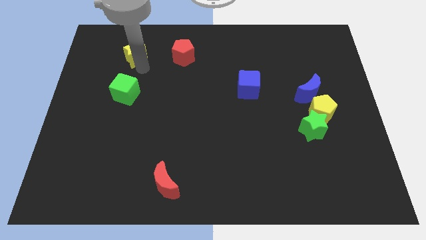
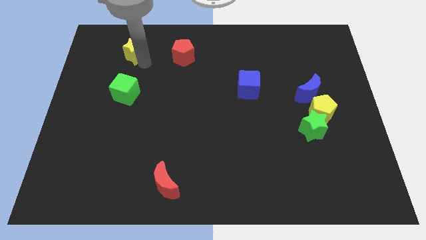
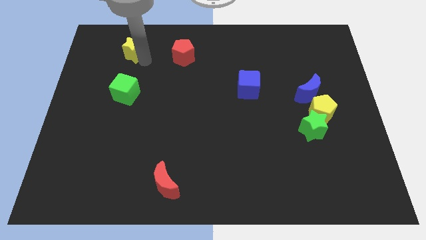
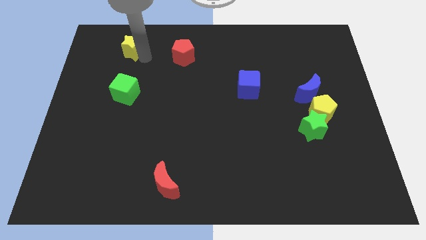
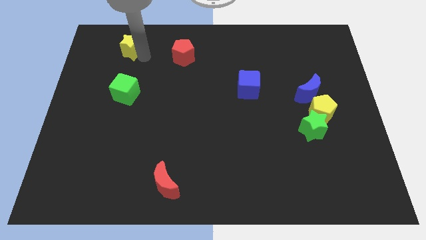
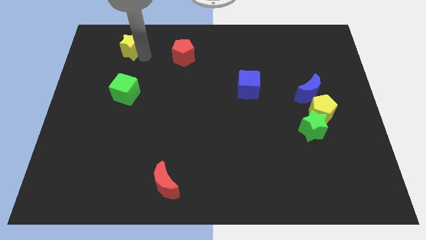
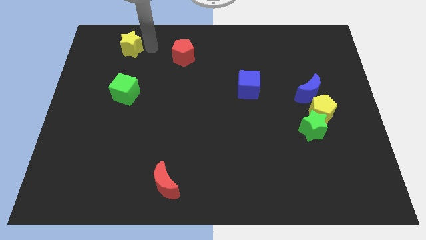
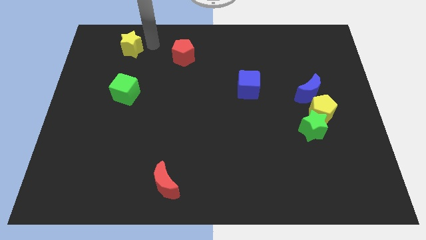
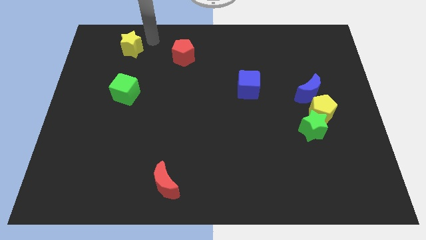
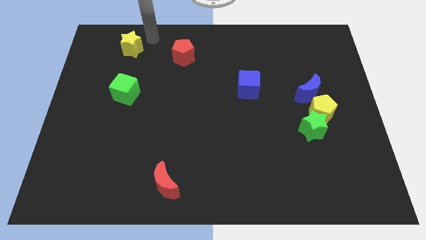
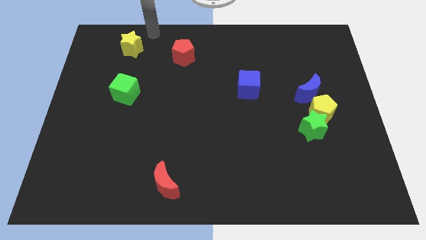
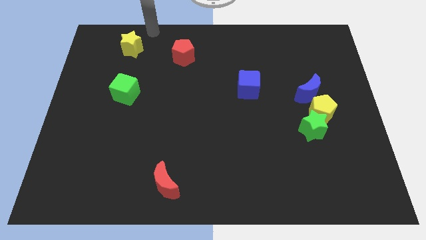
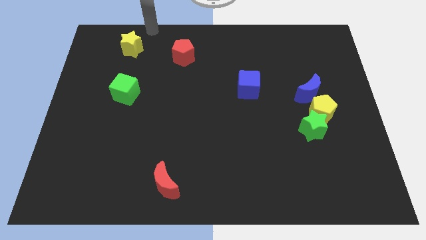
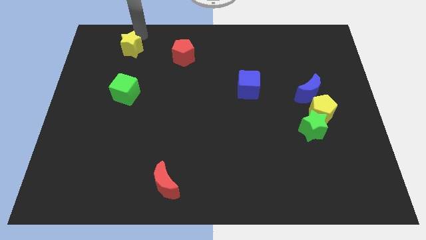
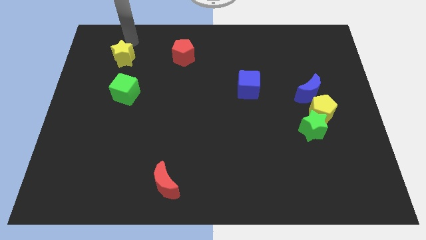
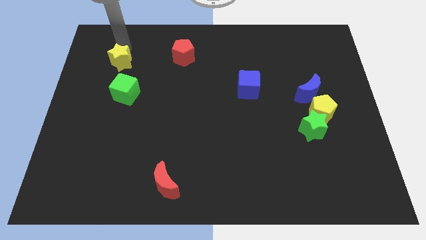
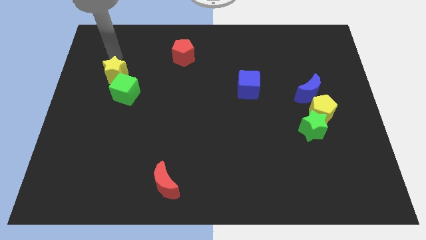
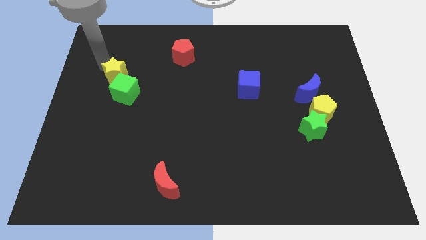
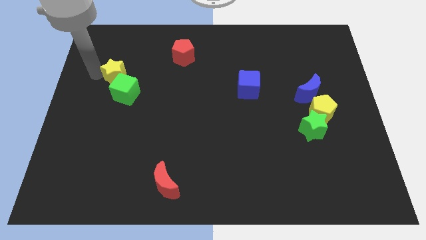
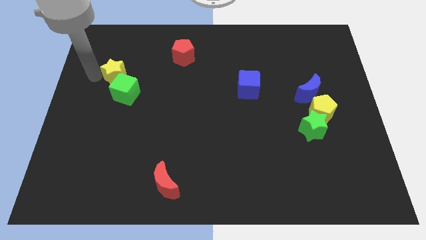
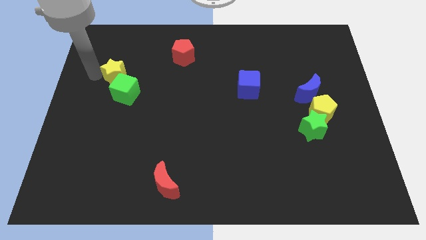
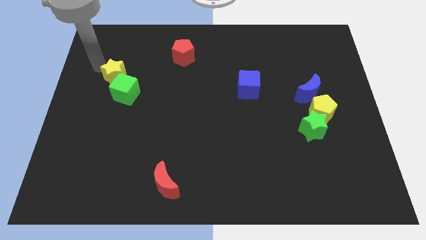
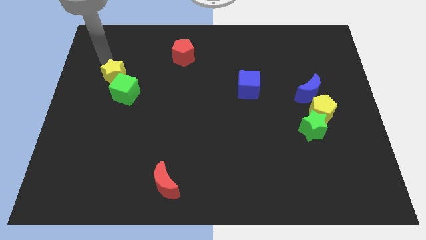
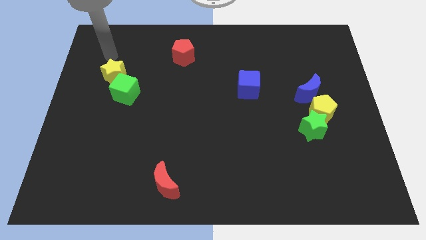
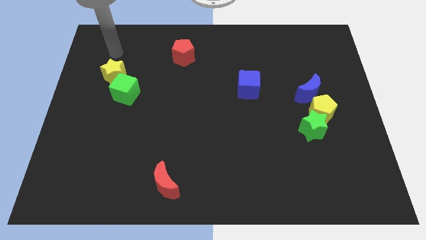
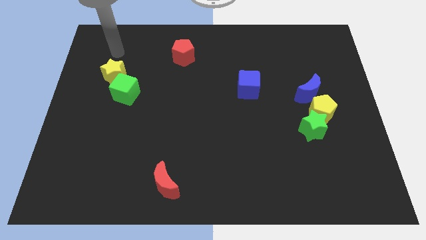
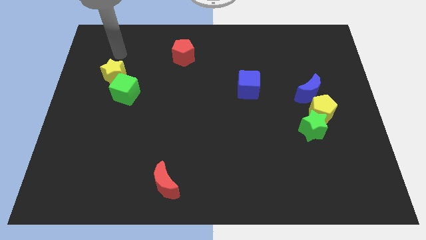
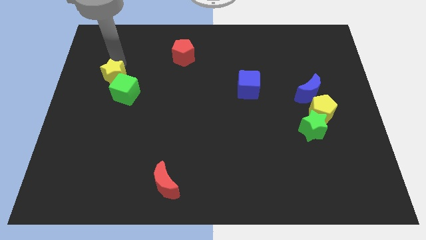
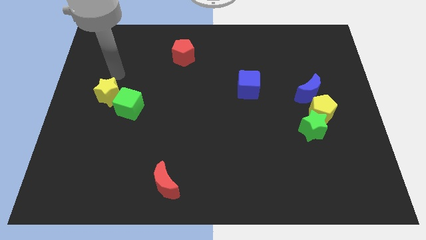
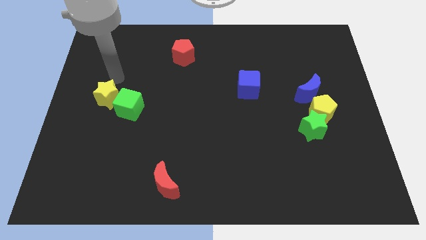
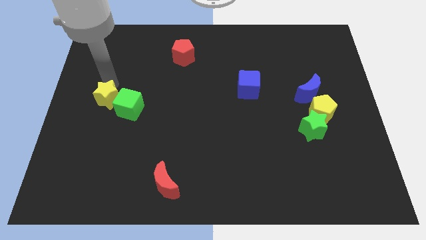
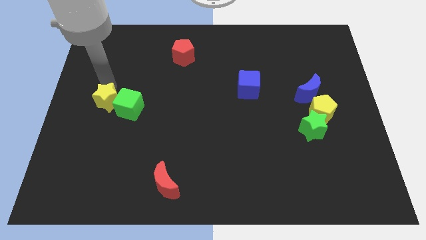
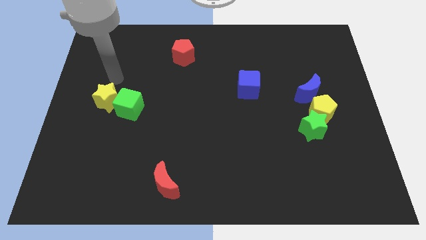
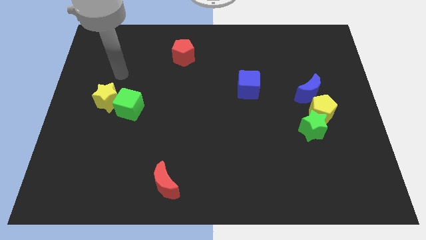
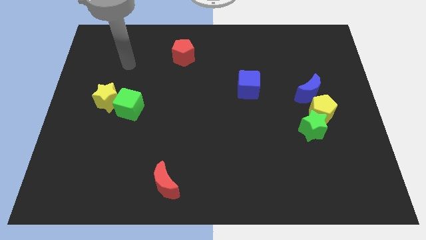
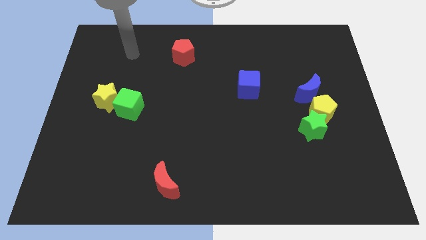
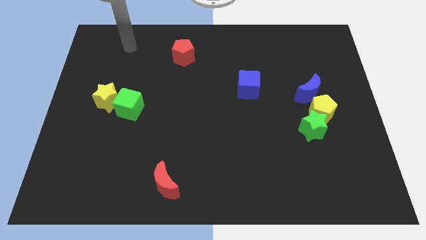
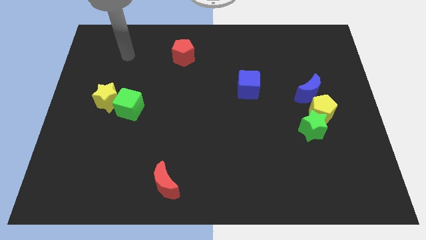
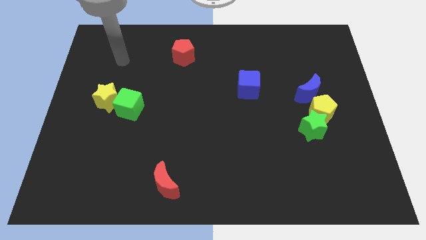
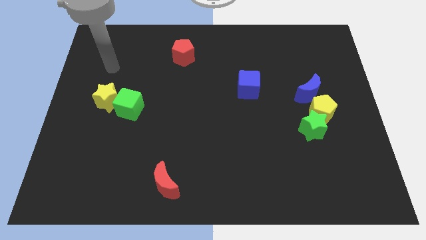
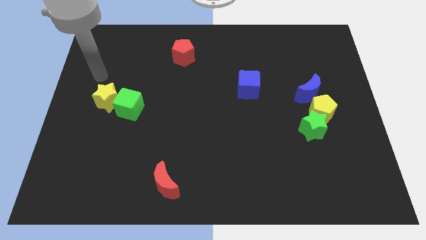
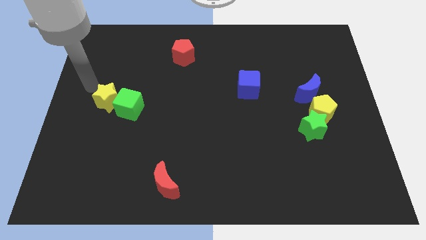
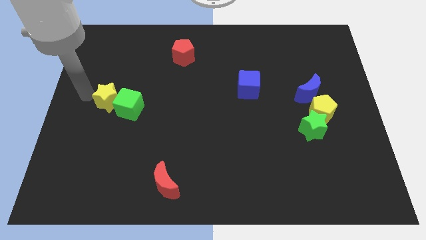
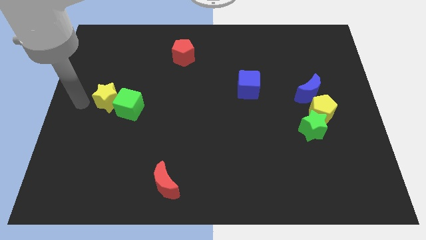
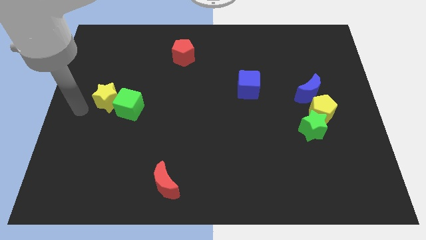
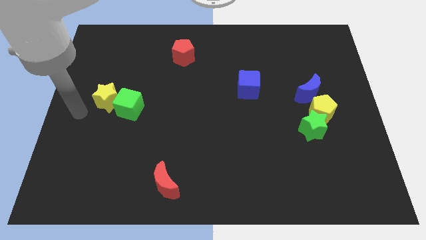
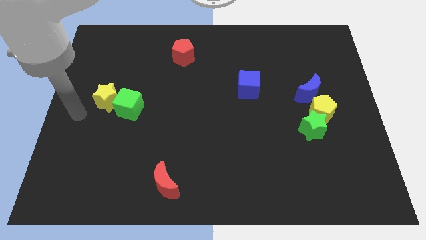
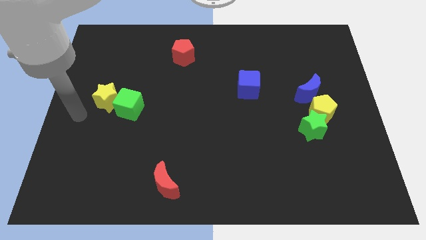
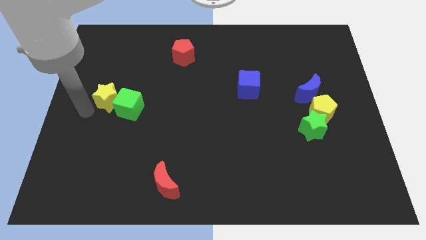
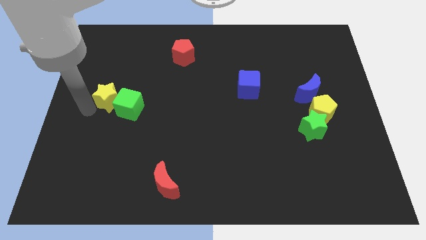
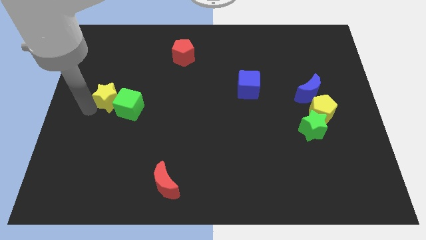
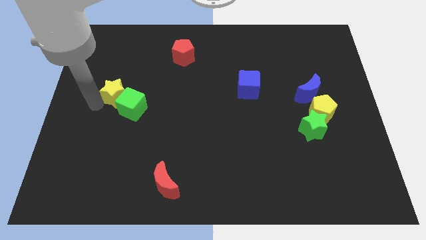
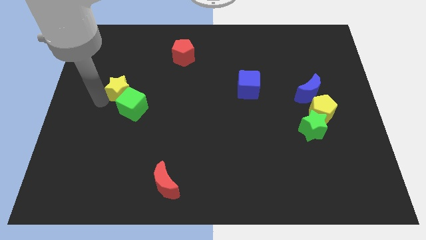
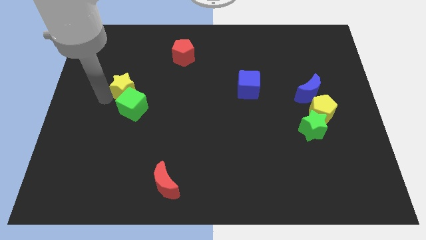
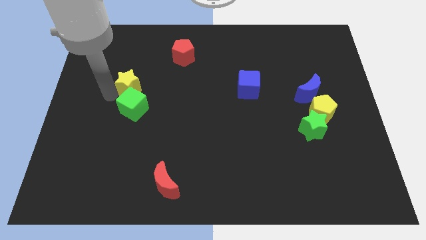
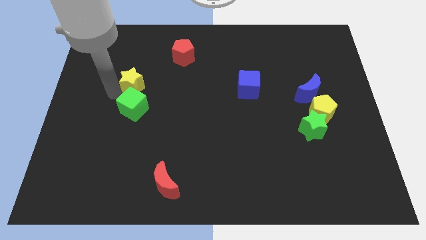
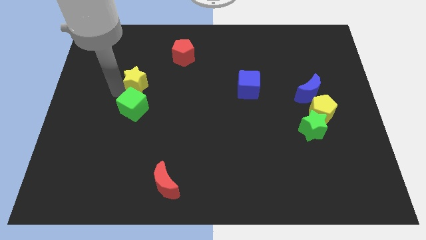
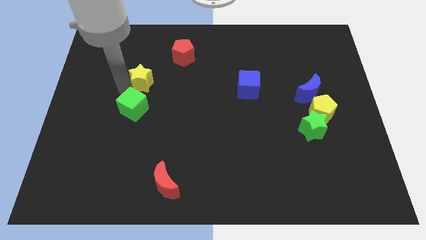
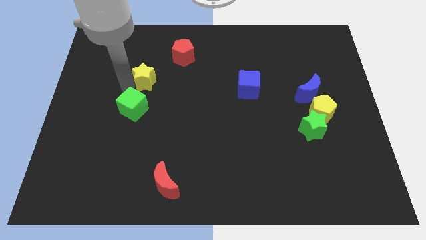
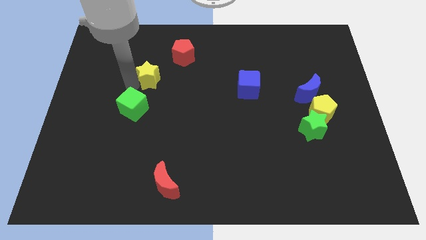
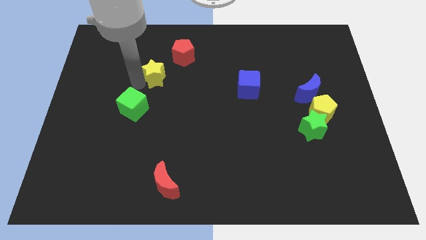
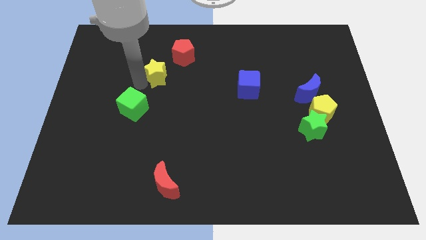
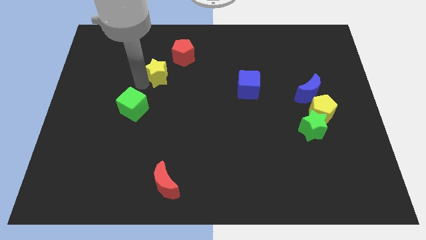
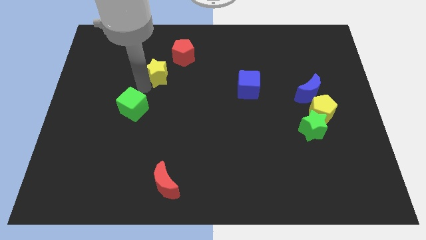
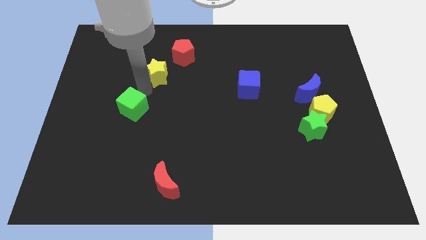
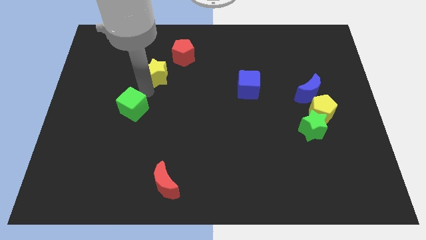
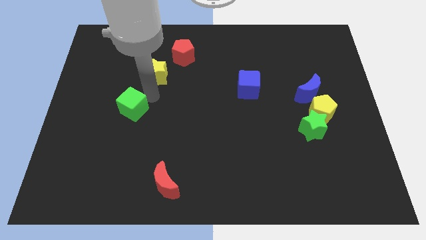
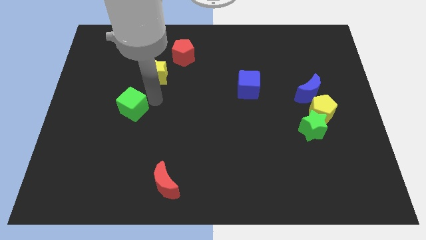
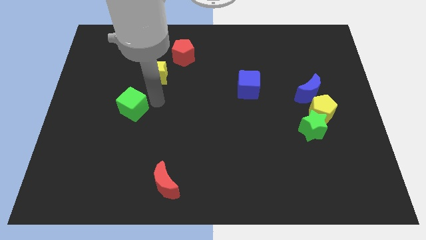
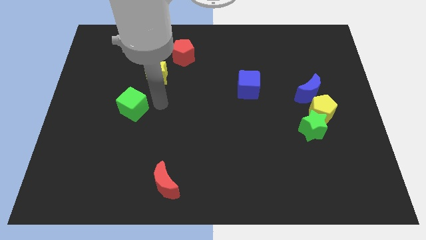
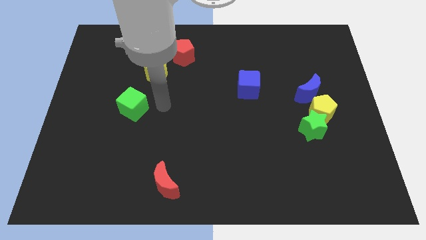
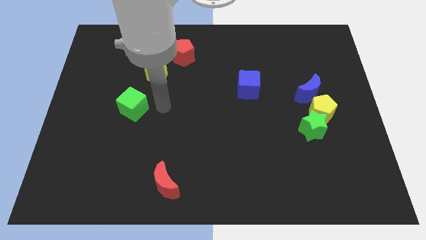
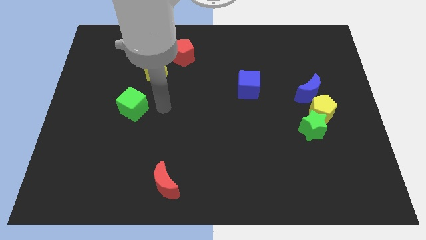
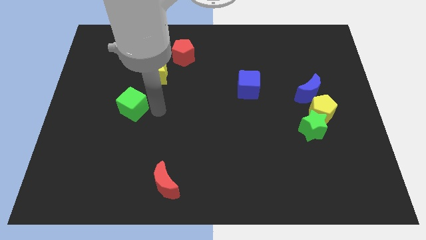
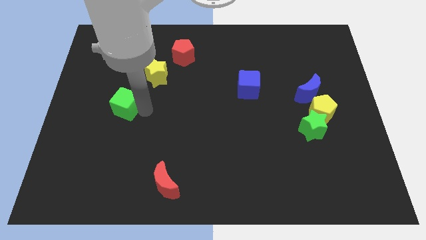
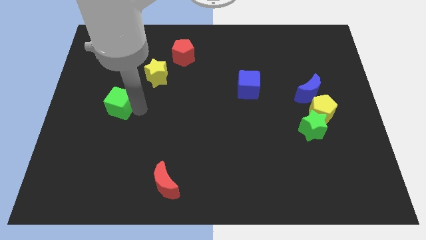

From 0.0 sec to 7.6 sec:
place the yellow star in between the red pentagon and green cube

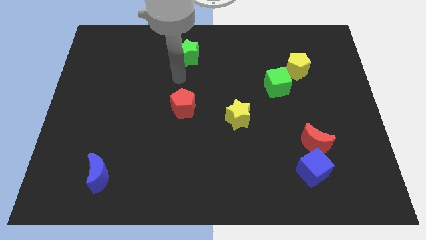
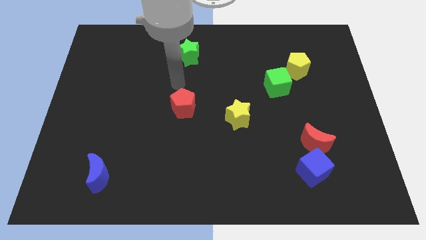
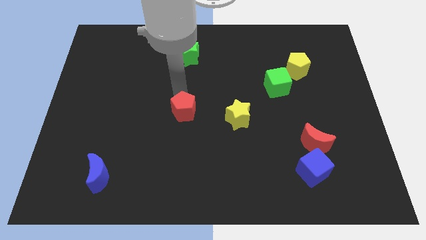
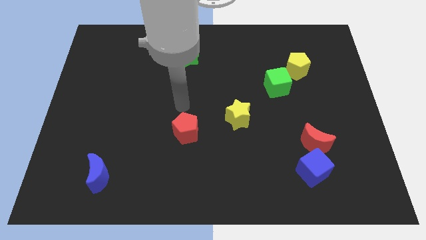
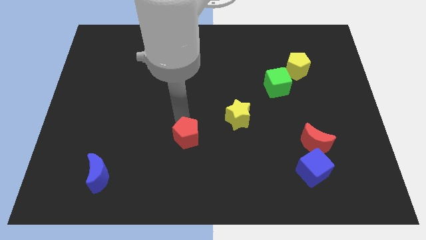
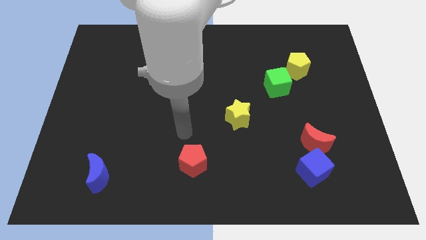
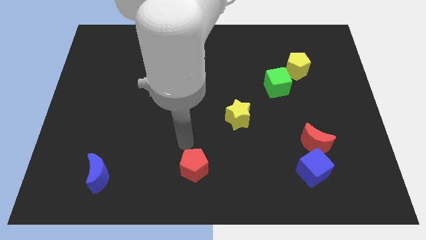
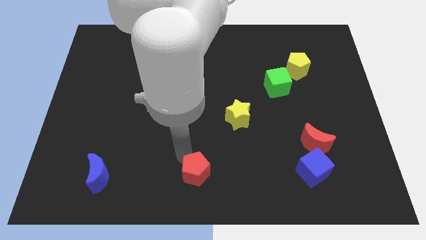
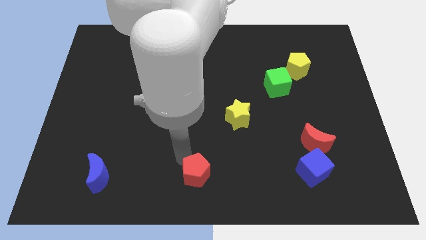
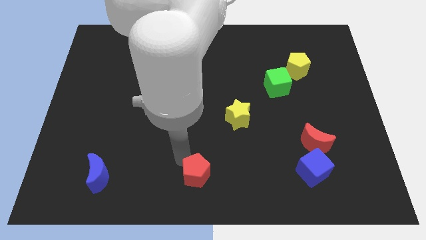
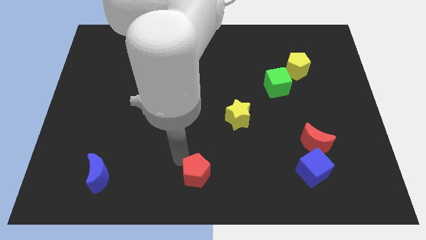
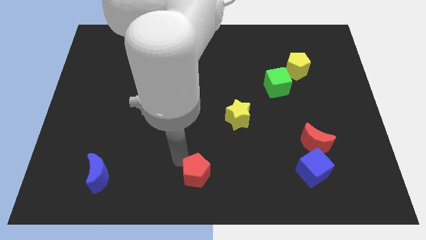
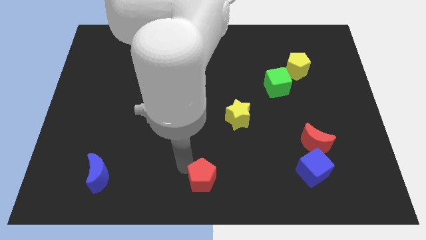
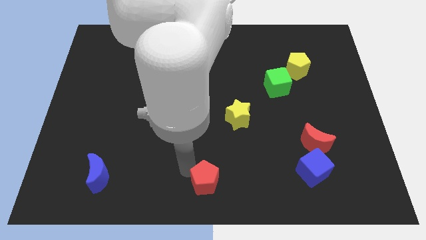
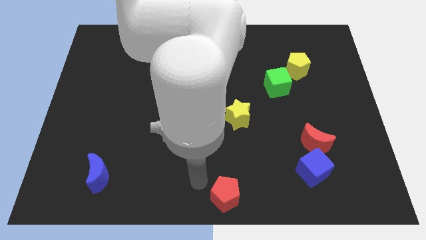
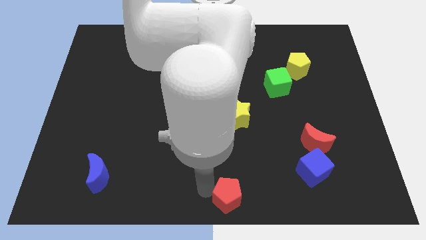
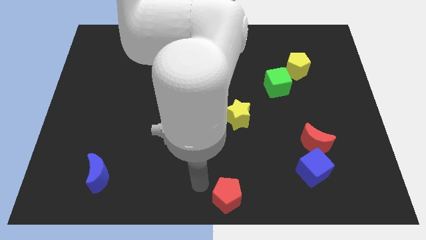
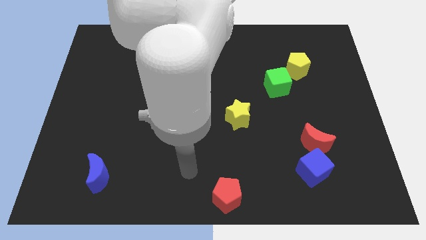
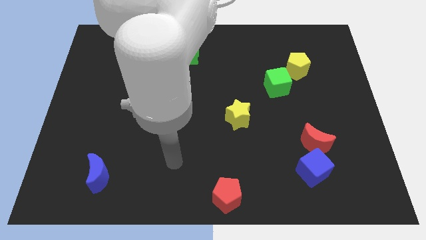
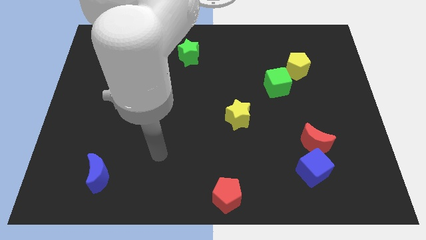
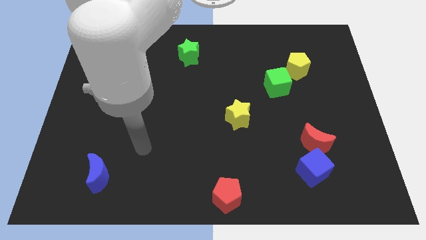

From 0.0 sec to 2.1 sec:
push the red pentagon towards the bottom center of the board
